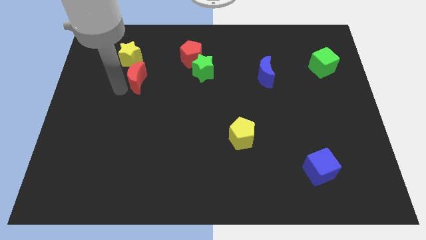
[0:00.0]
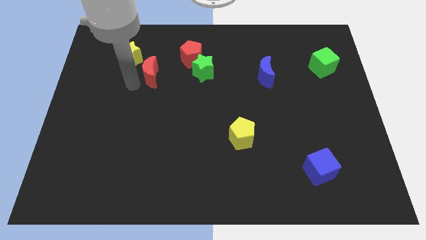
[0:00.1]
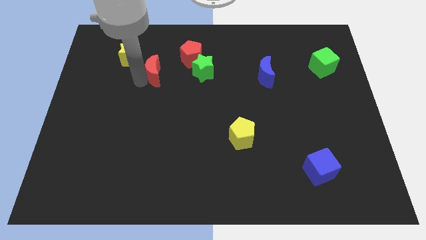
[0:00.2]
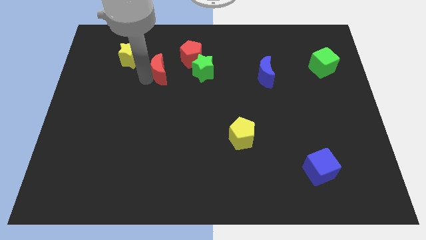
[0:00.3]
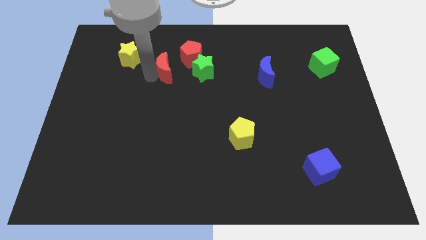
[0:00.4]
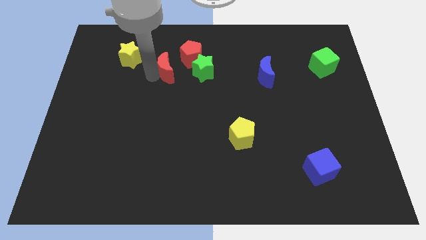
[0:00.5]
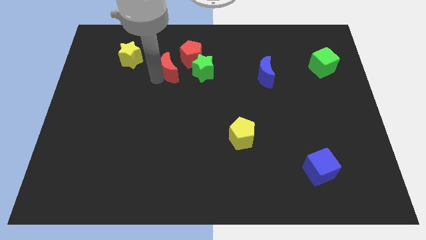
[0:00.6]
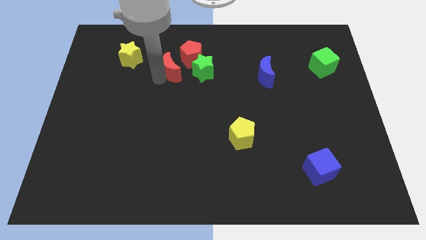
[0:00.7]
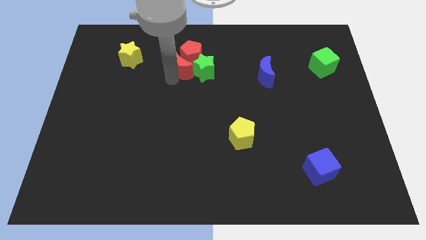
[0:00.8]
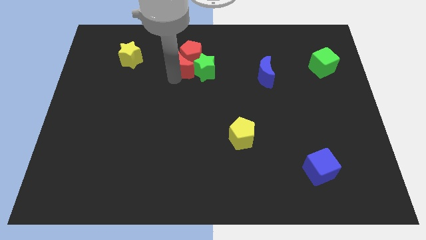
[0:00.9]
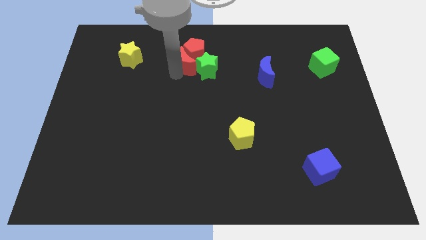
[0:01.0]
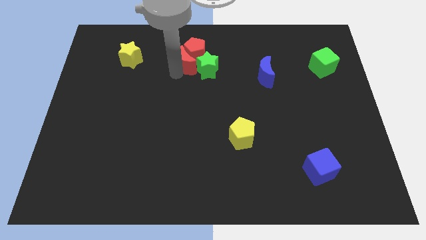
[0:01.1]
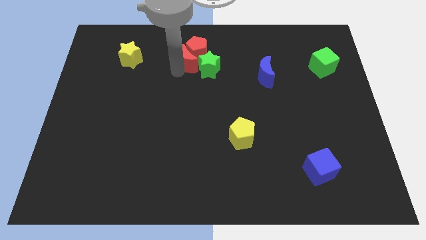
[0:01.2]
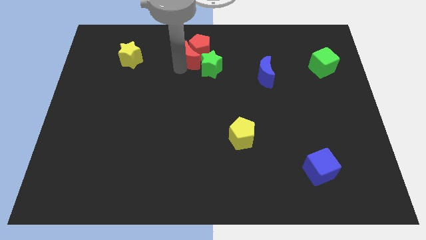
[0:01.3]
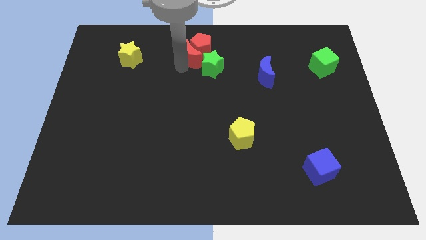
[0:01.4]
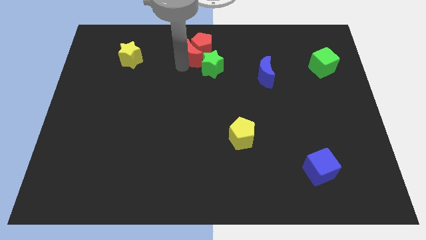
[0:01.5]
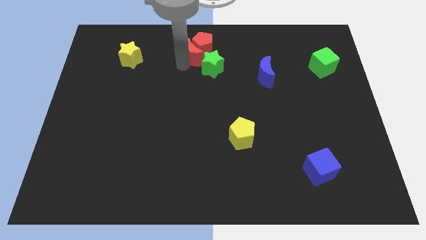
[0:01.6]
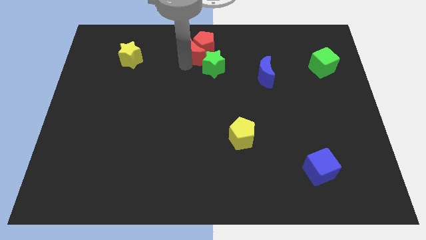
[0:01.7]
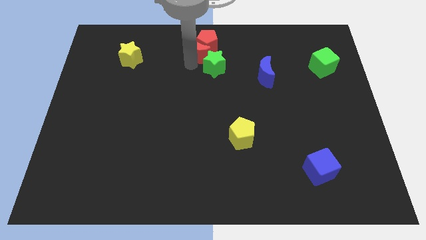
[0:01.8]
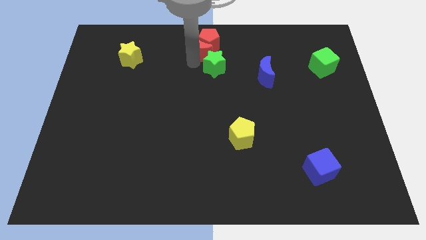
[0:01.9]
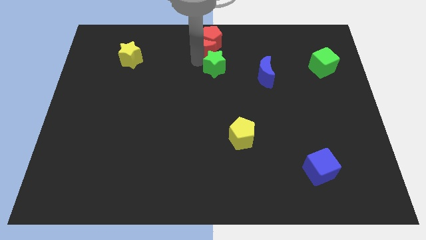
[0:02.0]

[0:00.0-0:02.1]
push the red crescent into the red pentagon

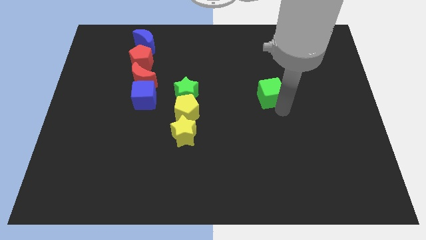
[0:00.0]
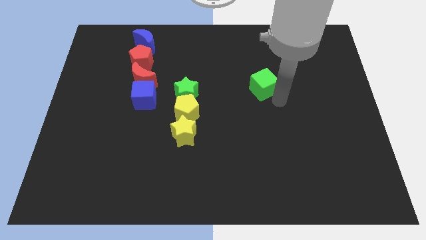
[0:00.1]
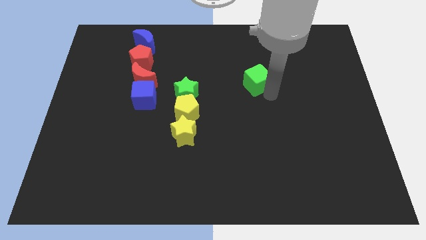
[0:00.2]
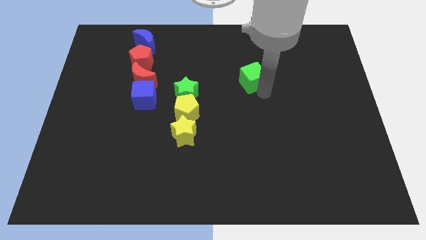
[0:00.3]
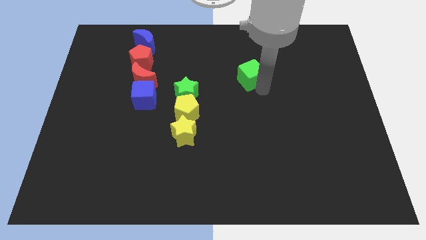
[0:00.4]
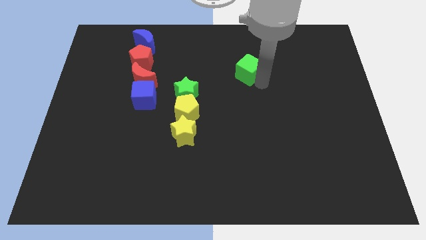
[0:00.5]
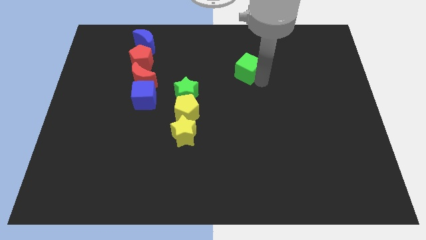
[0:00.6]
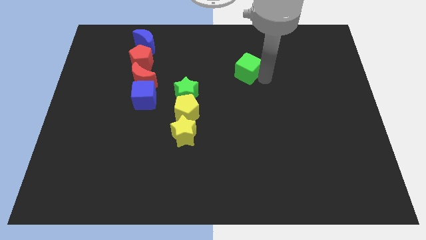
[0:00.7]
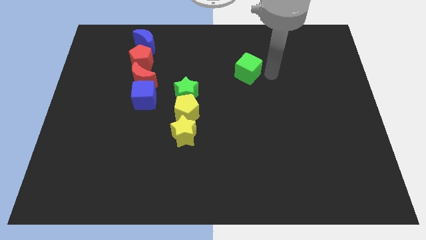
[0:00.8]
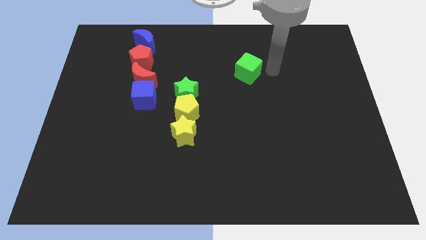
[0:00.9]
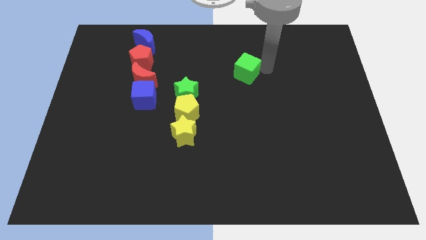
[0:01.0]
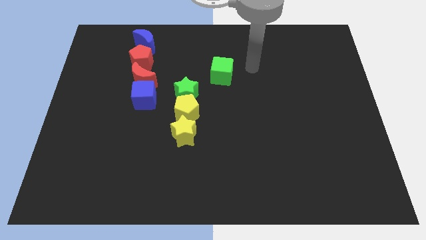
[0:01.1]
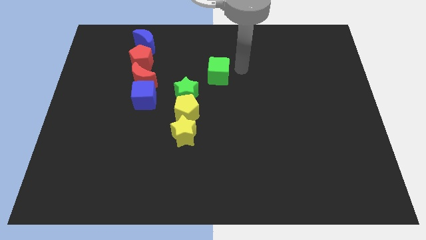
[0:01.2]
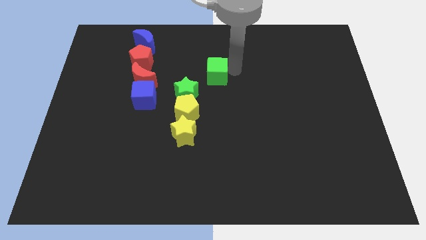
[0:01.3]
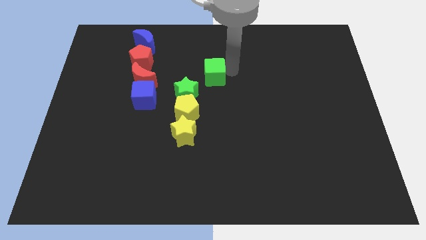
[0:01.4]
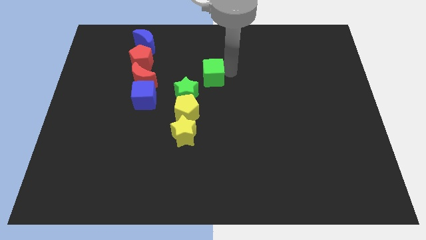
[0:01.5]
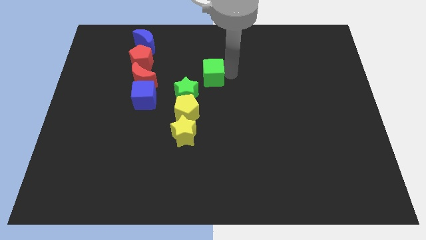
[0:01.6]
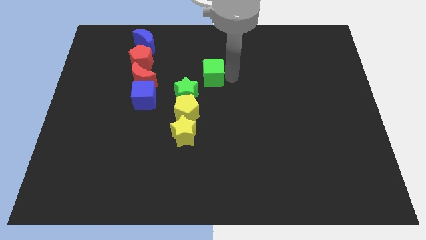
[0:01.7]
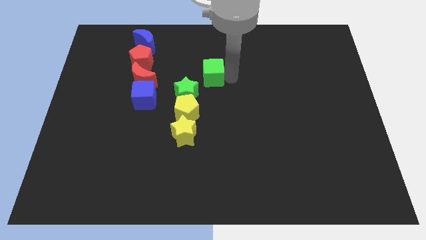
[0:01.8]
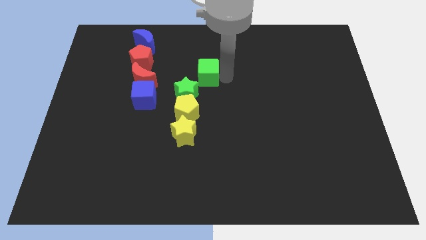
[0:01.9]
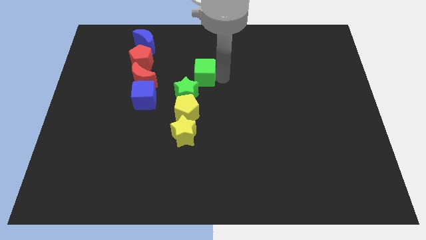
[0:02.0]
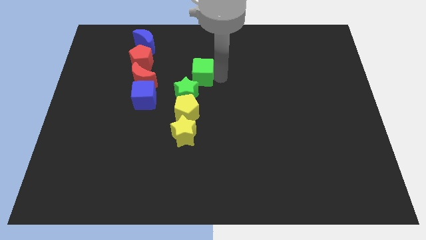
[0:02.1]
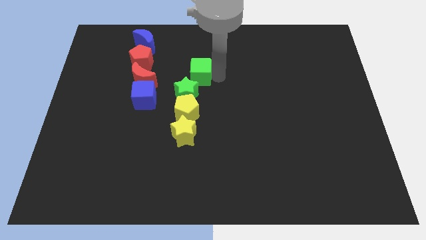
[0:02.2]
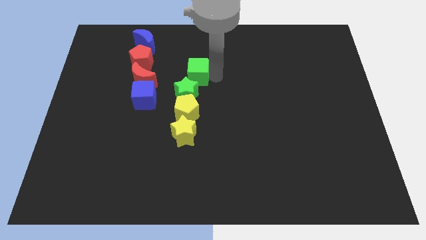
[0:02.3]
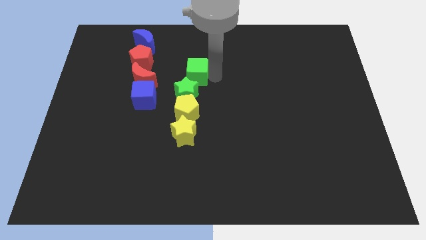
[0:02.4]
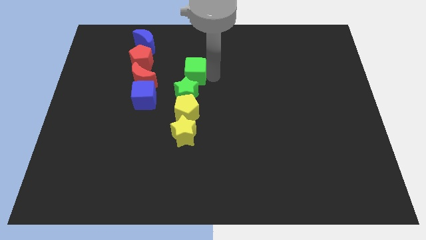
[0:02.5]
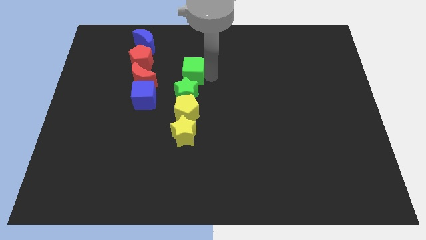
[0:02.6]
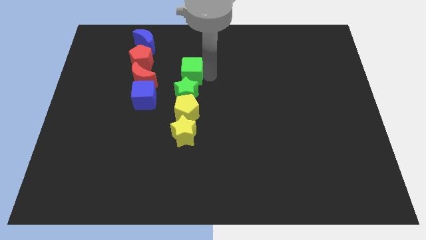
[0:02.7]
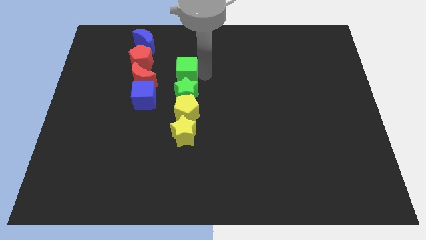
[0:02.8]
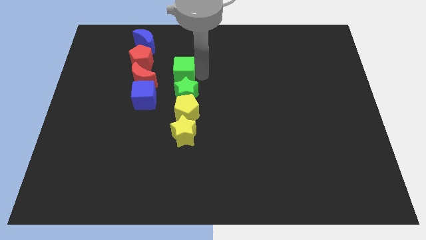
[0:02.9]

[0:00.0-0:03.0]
place the green cube above the green star

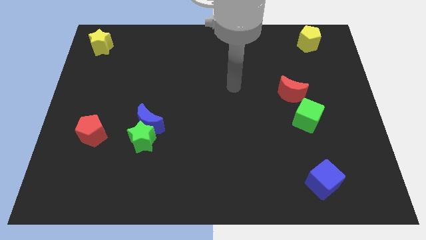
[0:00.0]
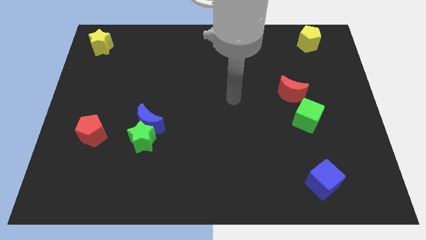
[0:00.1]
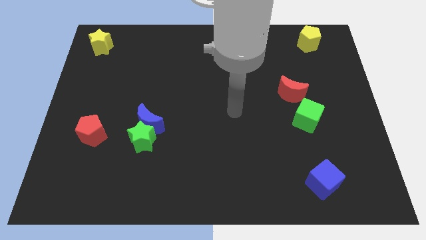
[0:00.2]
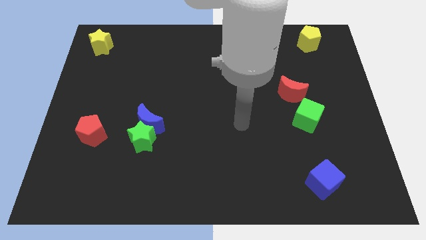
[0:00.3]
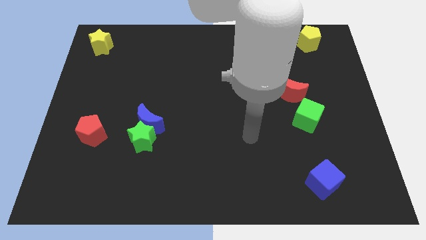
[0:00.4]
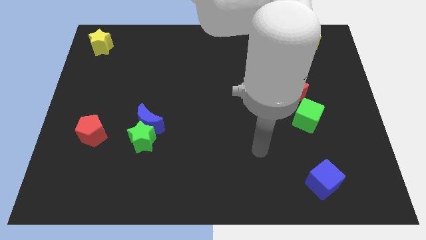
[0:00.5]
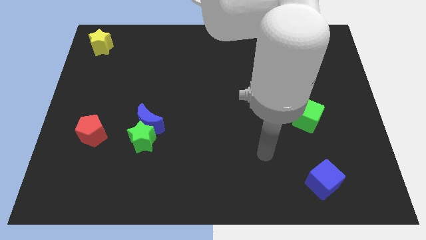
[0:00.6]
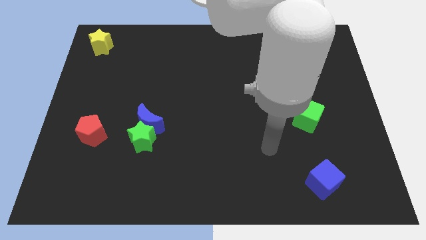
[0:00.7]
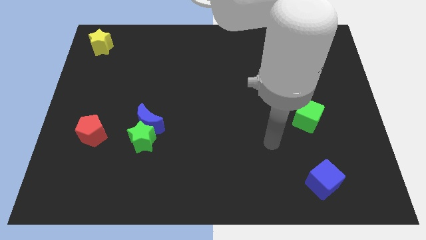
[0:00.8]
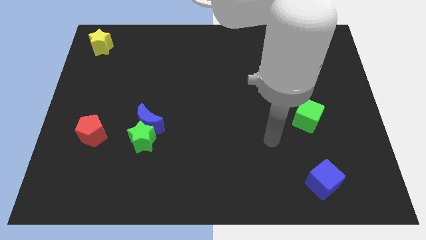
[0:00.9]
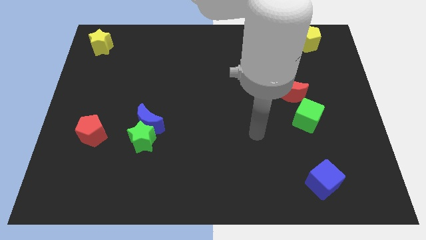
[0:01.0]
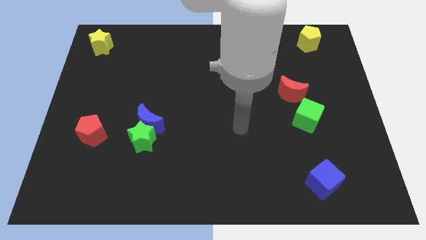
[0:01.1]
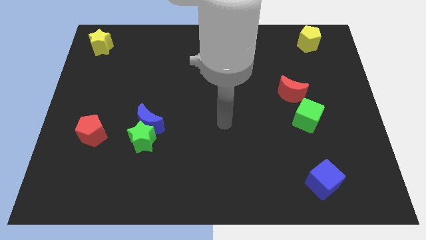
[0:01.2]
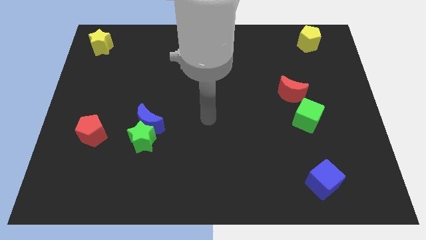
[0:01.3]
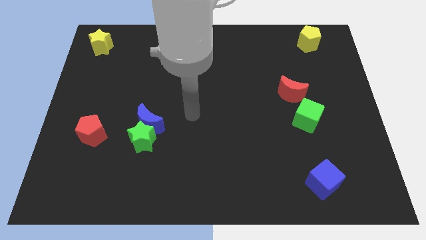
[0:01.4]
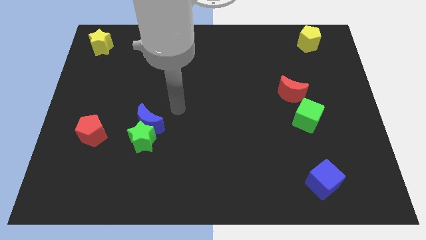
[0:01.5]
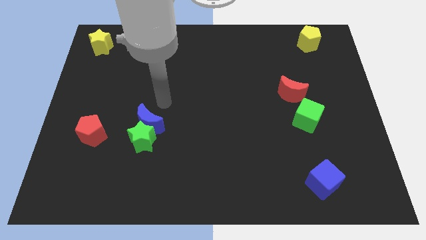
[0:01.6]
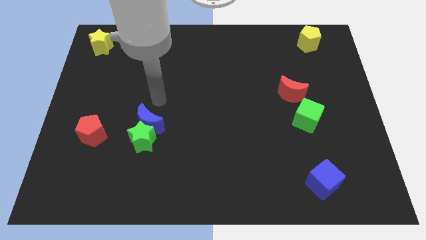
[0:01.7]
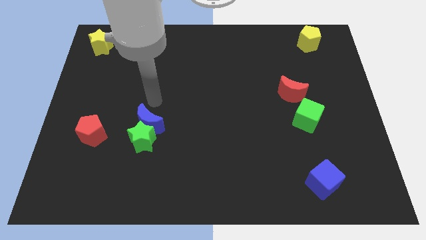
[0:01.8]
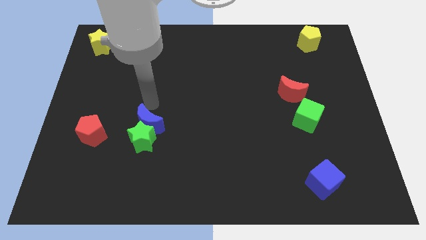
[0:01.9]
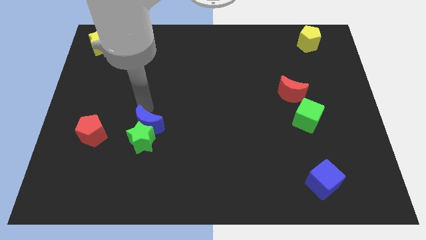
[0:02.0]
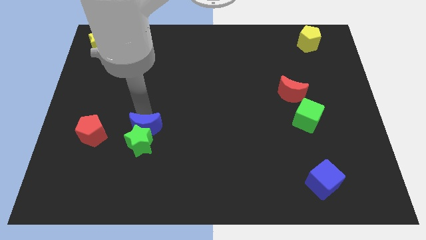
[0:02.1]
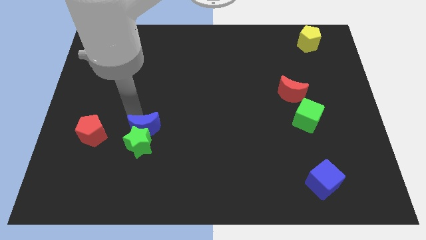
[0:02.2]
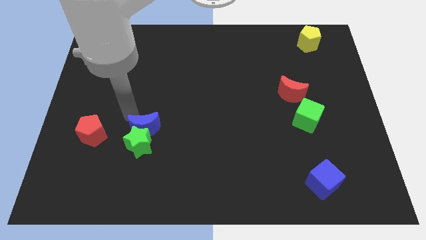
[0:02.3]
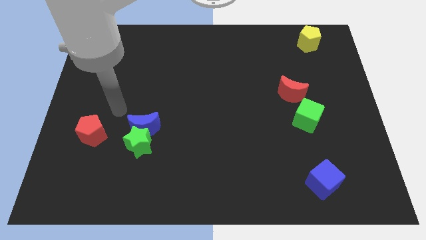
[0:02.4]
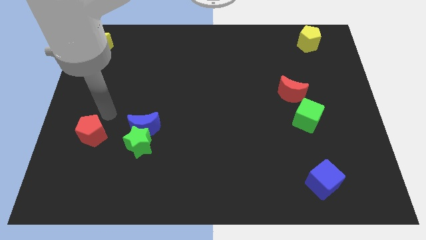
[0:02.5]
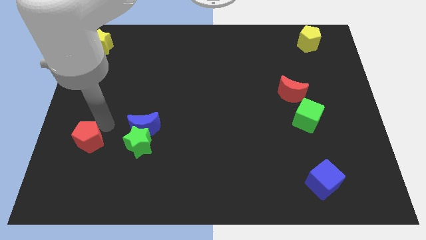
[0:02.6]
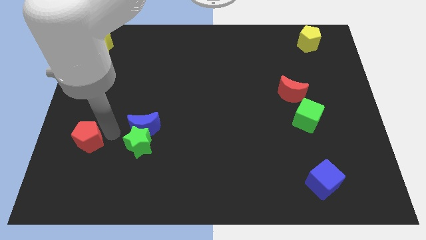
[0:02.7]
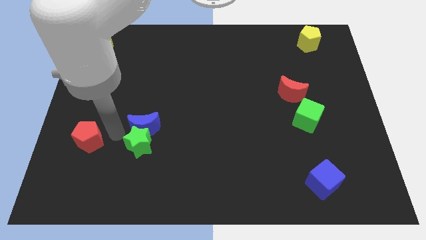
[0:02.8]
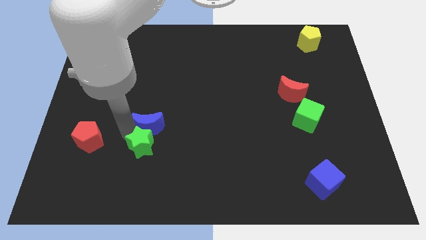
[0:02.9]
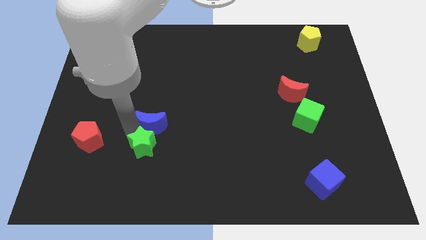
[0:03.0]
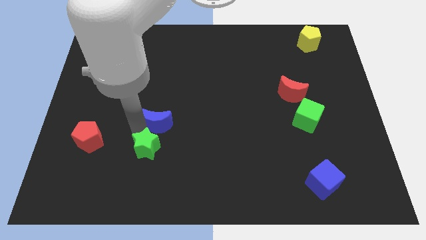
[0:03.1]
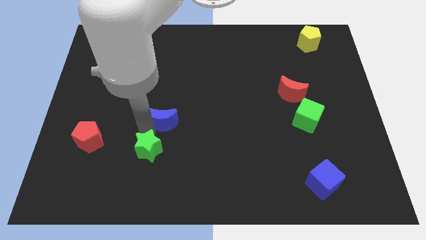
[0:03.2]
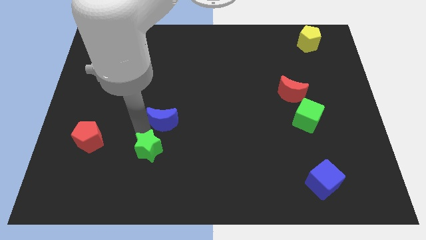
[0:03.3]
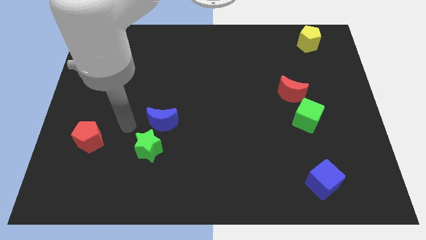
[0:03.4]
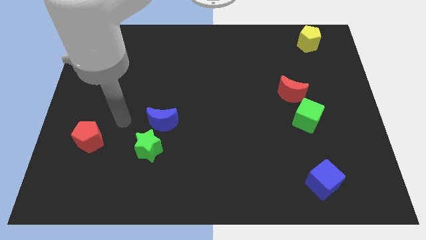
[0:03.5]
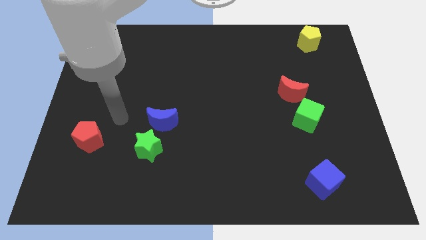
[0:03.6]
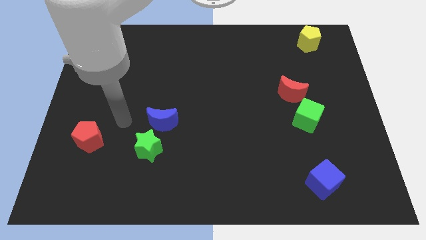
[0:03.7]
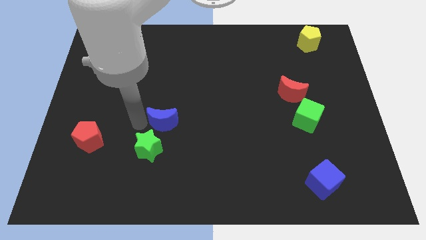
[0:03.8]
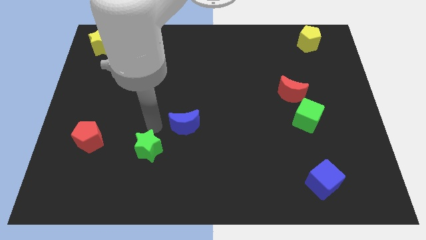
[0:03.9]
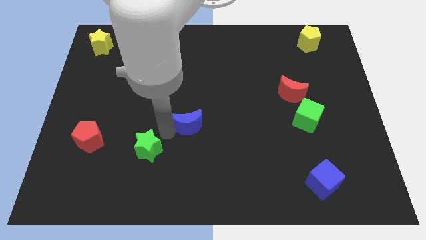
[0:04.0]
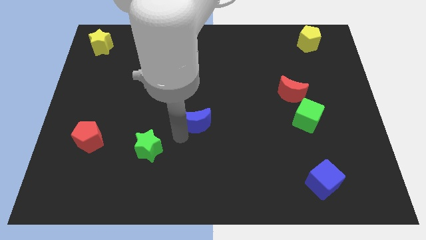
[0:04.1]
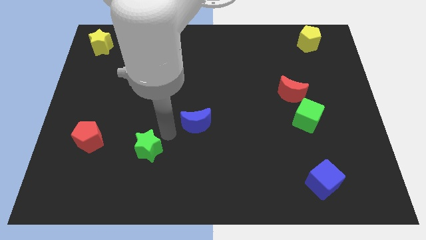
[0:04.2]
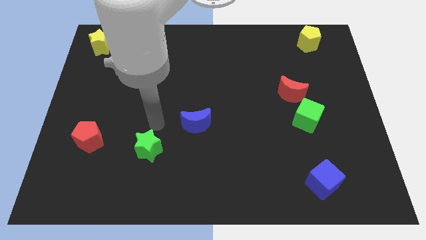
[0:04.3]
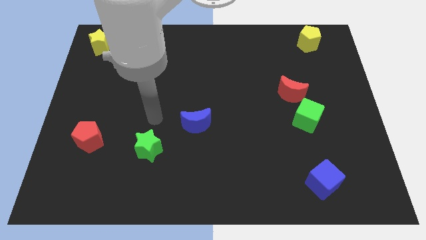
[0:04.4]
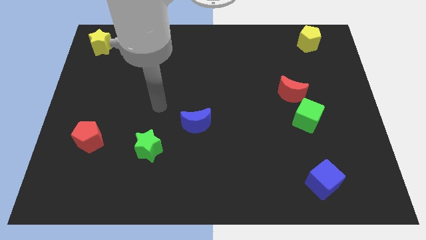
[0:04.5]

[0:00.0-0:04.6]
push the blue crescent towards the green star
